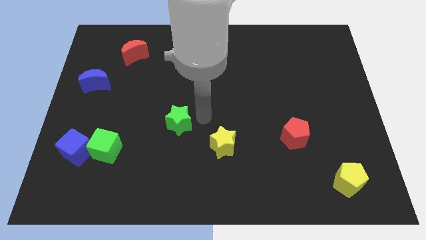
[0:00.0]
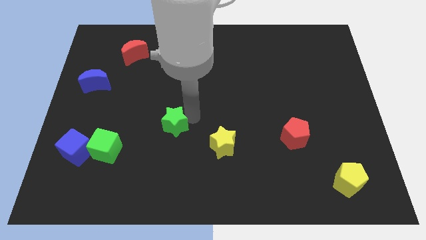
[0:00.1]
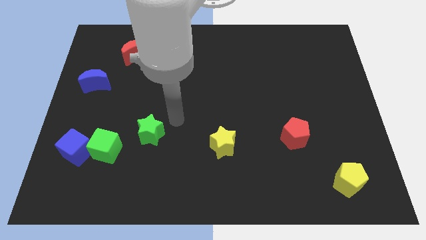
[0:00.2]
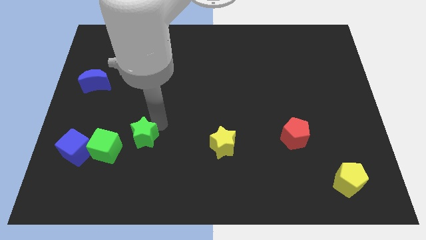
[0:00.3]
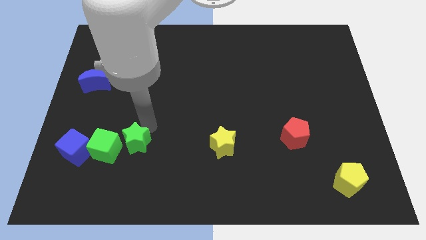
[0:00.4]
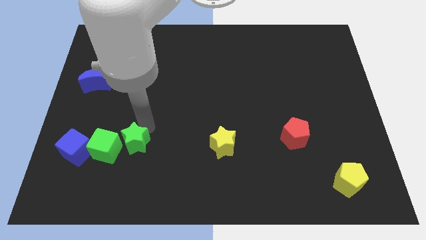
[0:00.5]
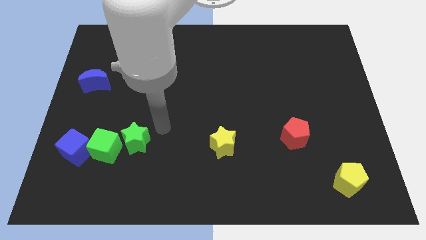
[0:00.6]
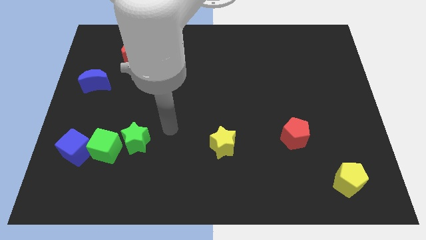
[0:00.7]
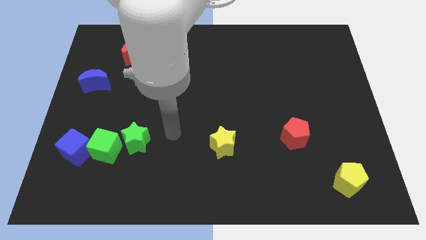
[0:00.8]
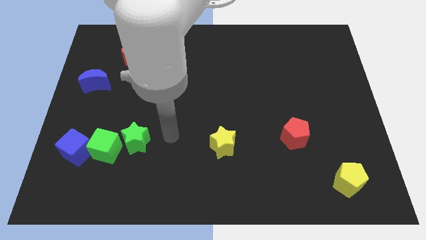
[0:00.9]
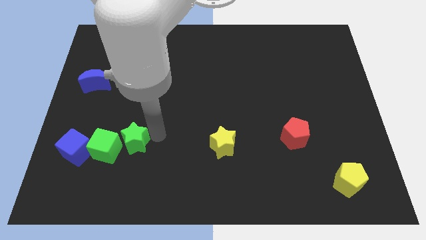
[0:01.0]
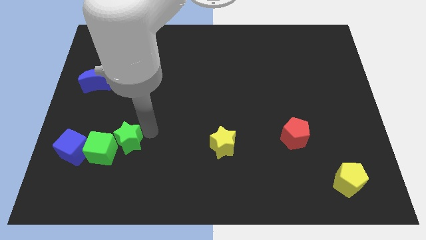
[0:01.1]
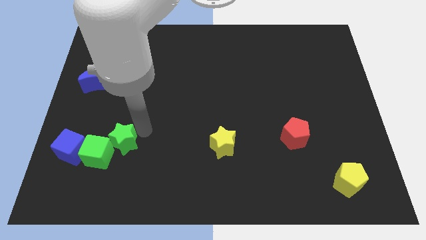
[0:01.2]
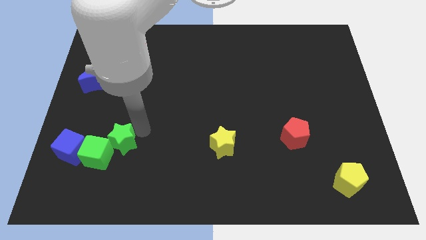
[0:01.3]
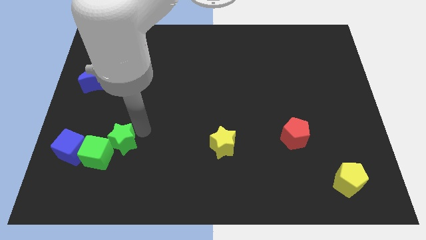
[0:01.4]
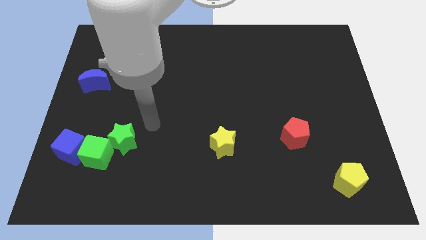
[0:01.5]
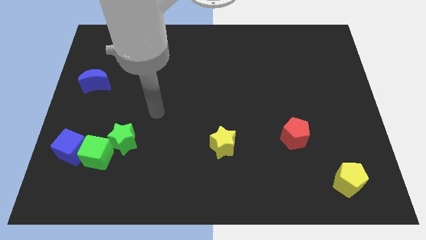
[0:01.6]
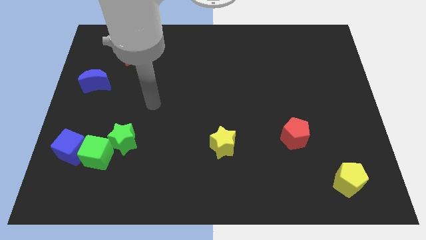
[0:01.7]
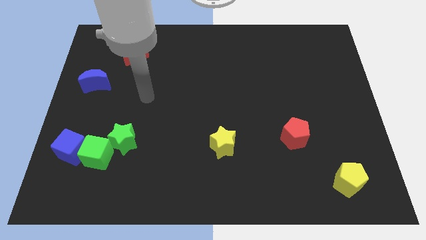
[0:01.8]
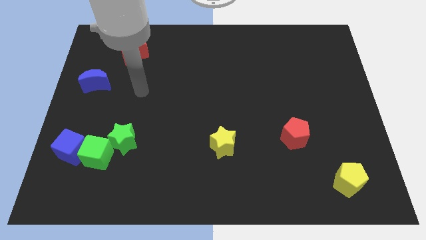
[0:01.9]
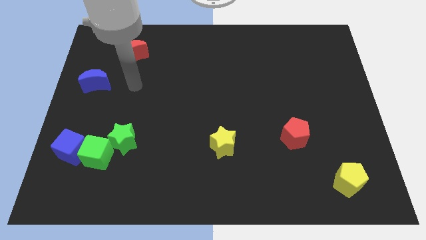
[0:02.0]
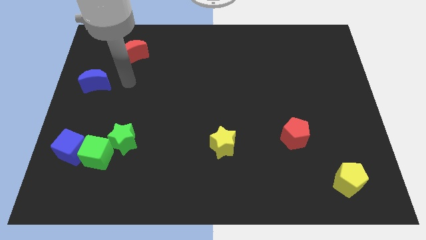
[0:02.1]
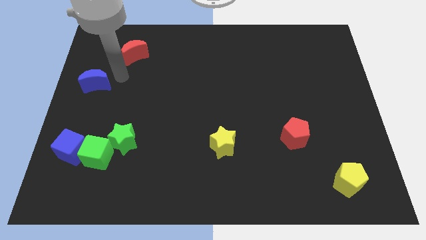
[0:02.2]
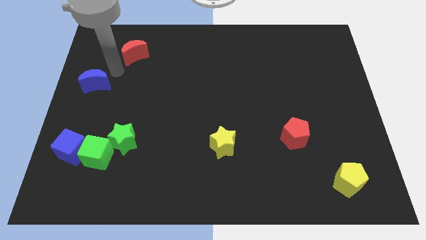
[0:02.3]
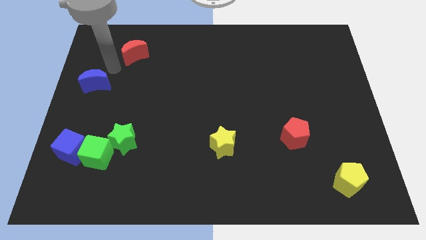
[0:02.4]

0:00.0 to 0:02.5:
move the green star near to the horizontal line

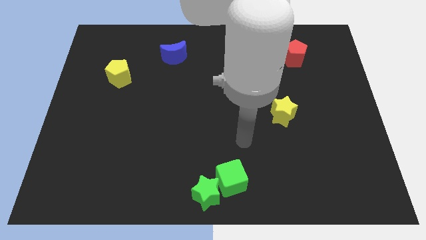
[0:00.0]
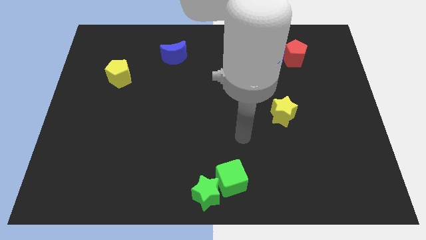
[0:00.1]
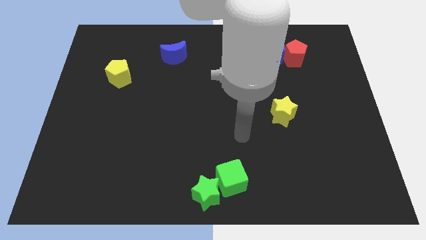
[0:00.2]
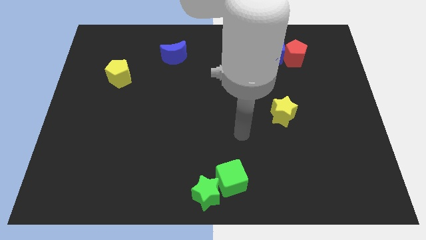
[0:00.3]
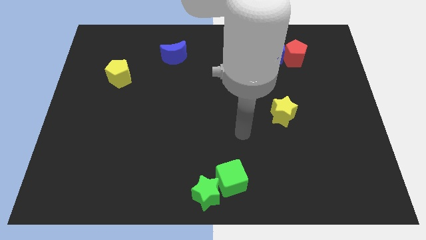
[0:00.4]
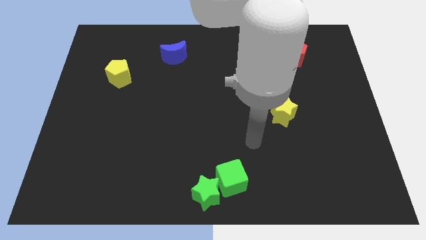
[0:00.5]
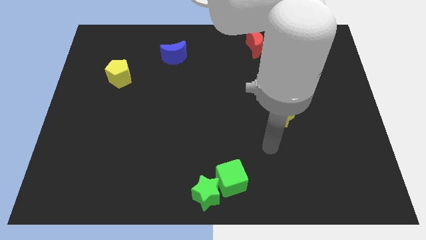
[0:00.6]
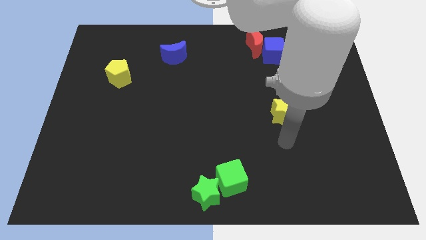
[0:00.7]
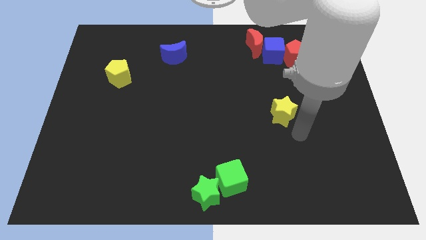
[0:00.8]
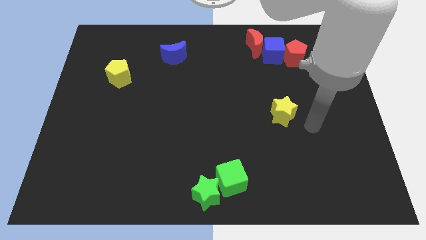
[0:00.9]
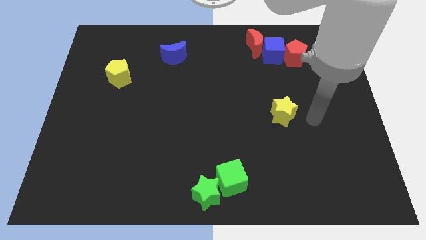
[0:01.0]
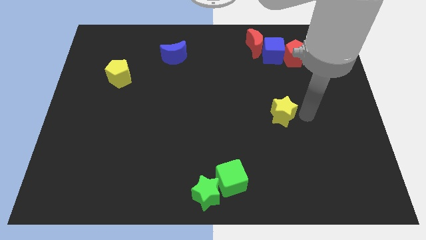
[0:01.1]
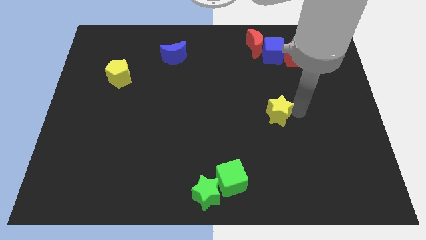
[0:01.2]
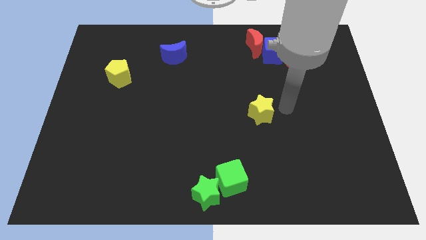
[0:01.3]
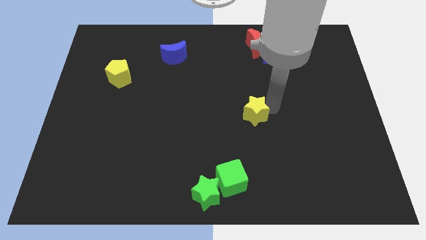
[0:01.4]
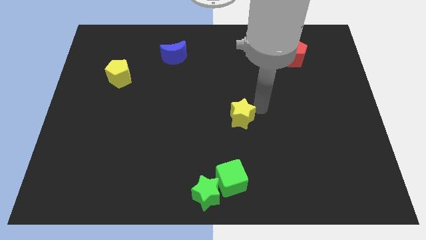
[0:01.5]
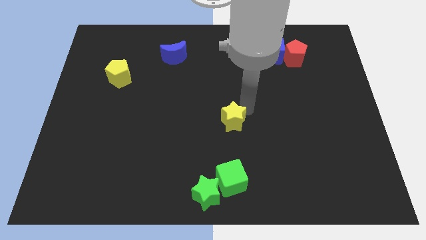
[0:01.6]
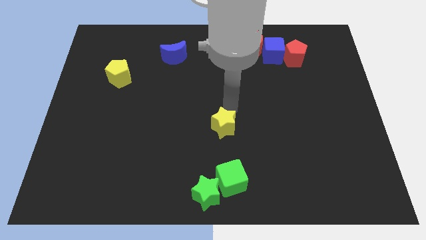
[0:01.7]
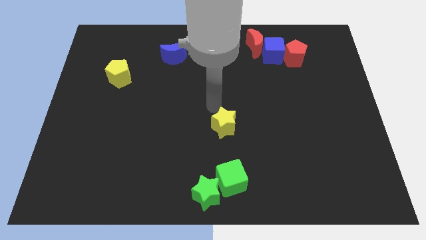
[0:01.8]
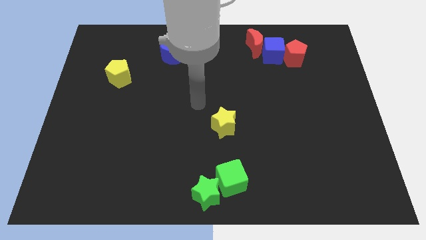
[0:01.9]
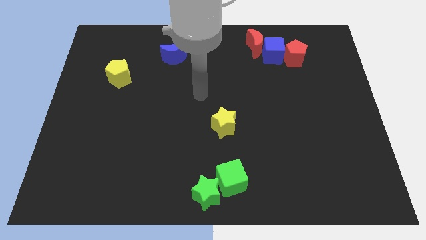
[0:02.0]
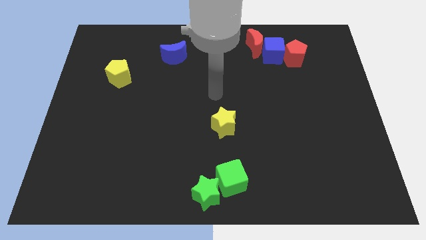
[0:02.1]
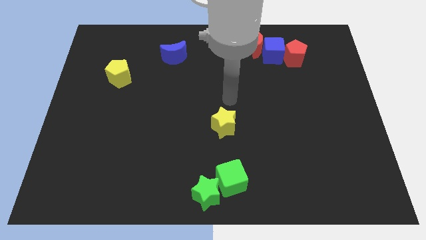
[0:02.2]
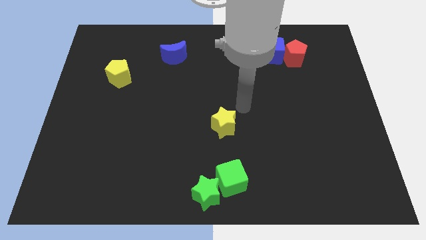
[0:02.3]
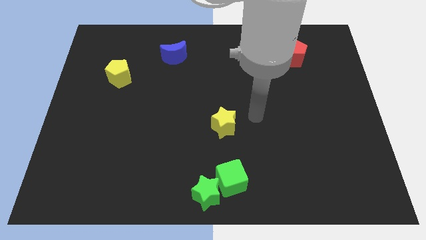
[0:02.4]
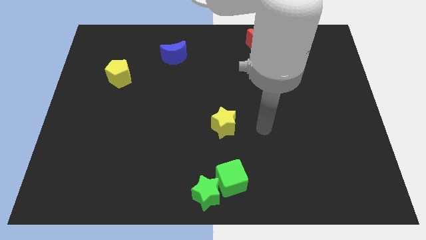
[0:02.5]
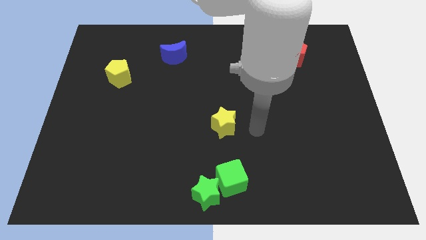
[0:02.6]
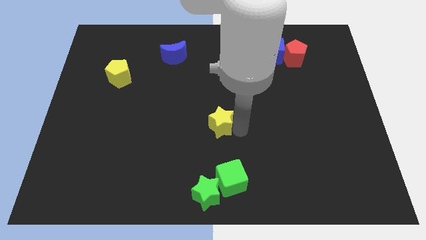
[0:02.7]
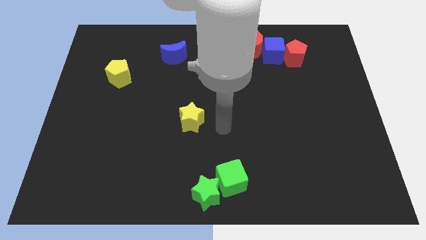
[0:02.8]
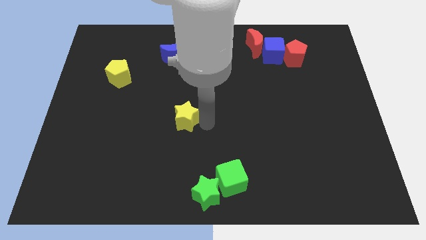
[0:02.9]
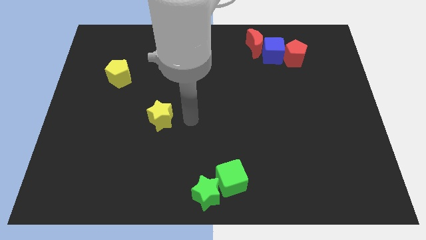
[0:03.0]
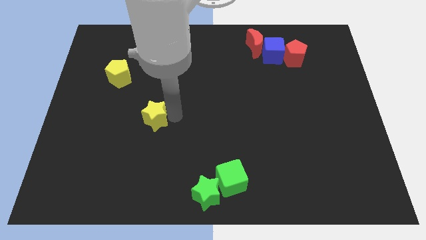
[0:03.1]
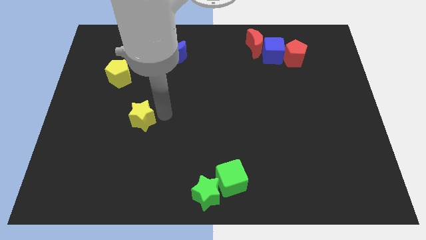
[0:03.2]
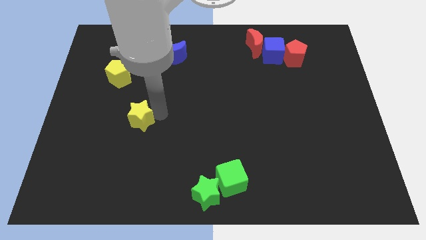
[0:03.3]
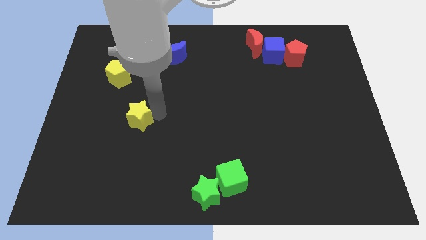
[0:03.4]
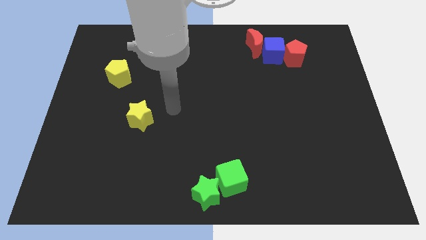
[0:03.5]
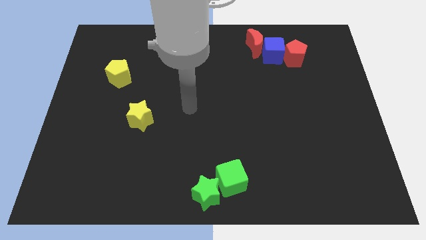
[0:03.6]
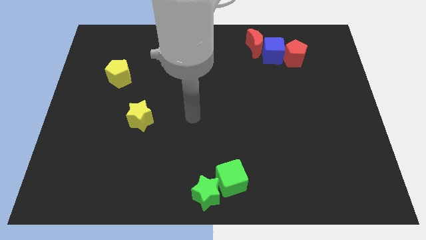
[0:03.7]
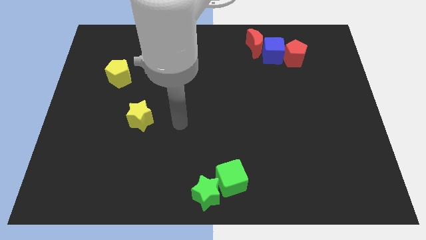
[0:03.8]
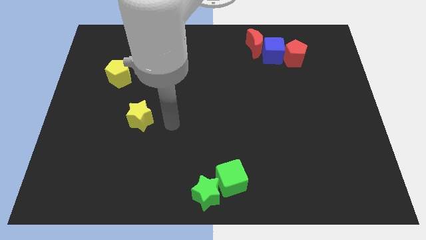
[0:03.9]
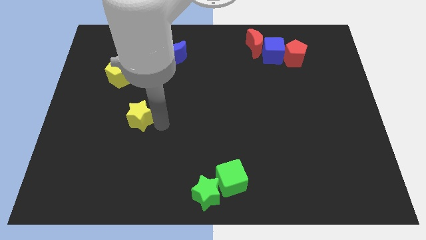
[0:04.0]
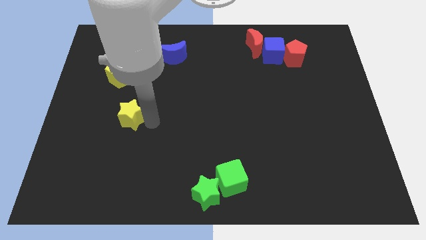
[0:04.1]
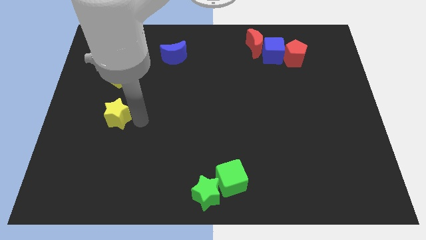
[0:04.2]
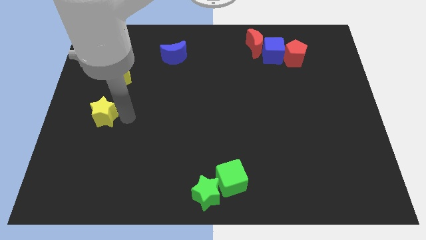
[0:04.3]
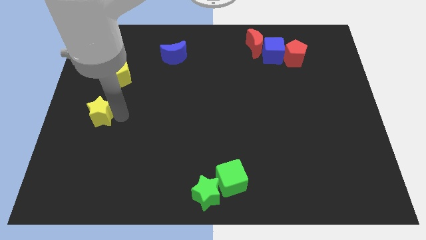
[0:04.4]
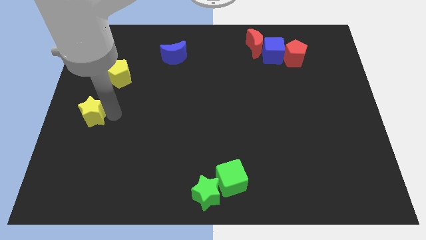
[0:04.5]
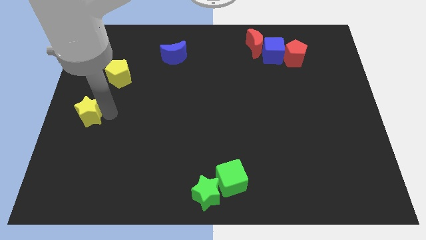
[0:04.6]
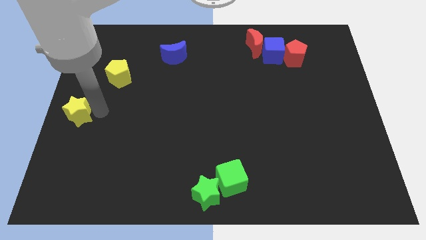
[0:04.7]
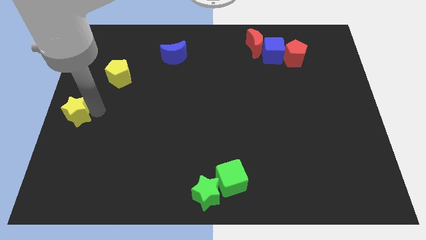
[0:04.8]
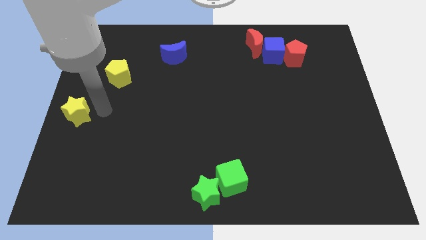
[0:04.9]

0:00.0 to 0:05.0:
place the yellow star at the left center of the board

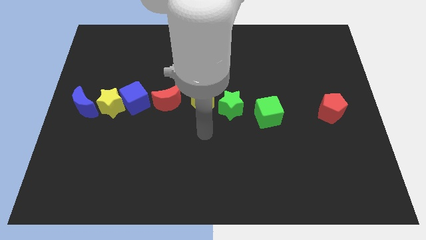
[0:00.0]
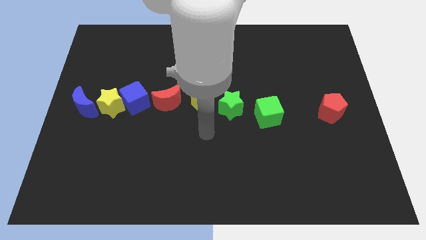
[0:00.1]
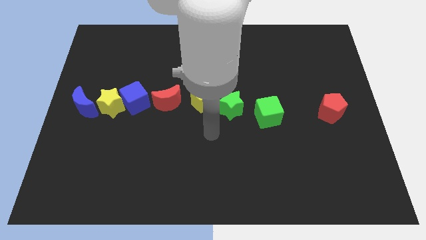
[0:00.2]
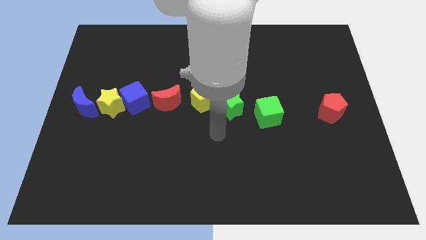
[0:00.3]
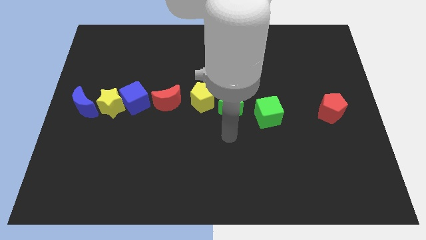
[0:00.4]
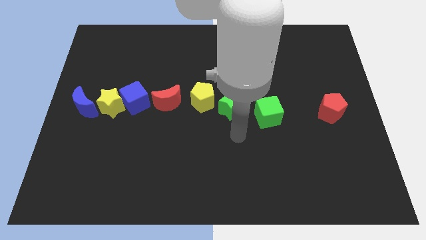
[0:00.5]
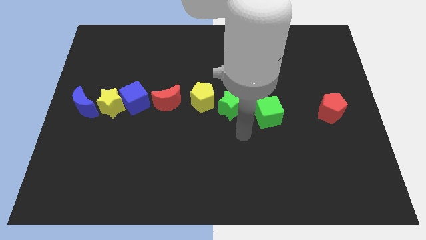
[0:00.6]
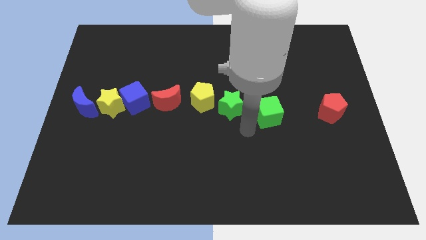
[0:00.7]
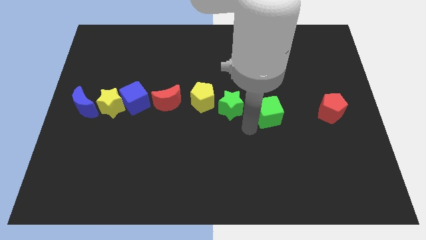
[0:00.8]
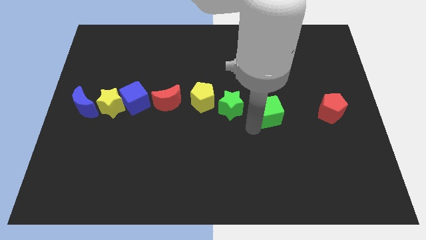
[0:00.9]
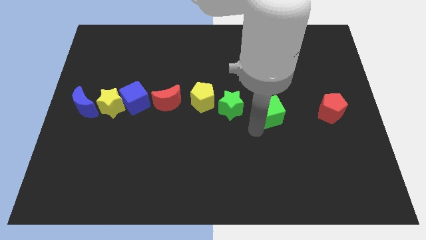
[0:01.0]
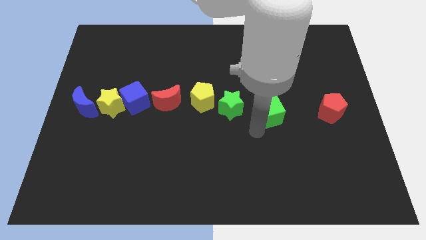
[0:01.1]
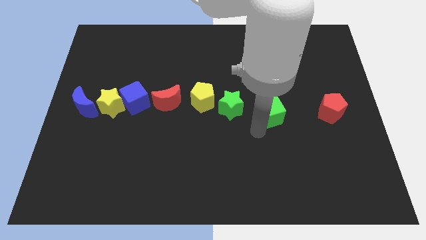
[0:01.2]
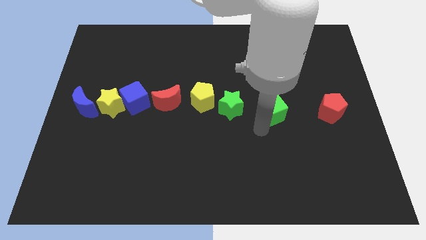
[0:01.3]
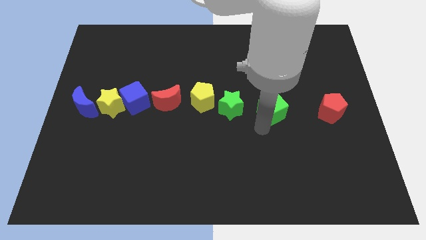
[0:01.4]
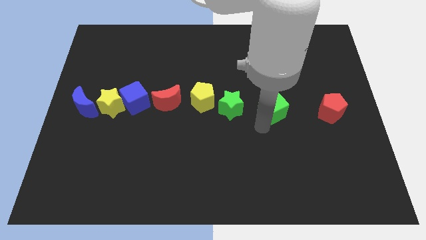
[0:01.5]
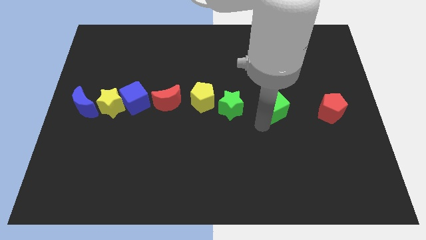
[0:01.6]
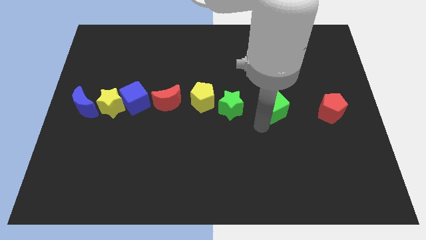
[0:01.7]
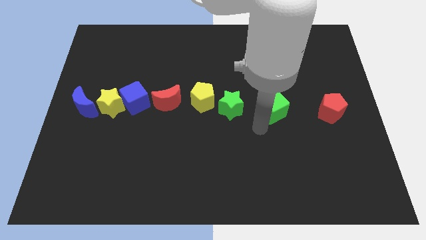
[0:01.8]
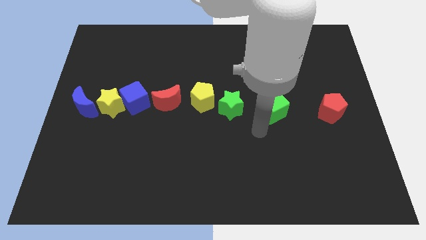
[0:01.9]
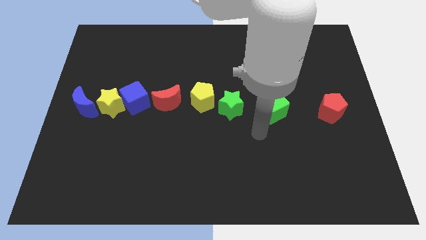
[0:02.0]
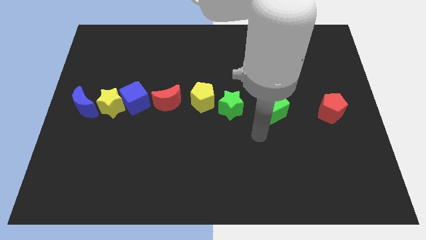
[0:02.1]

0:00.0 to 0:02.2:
move the green cube slightly to the top of the board
